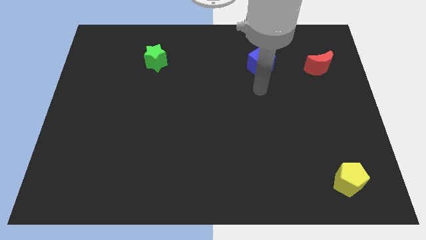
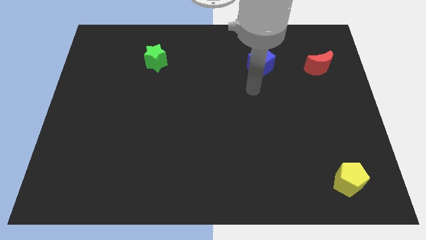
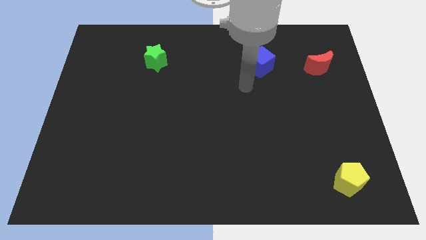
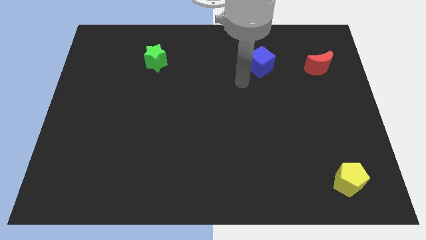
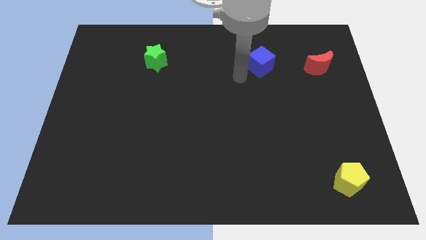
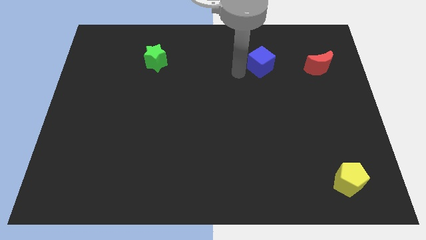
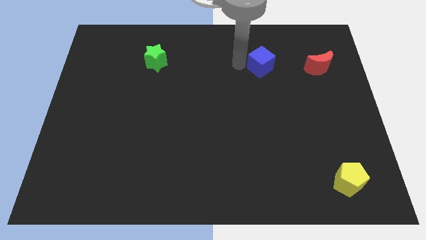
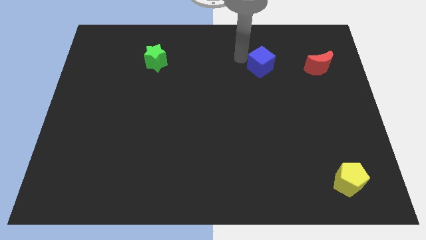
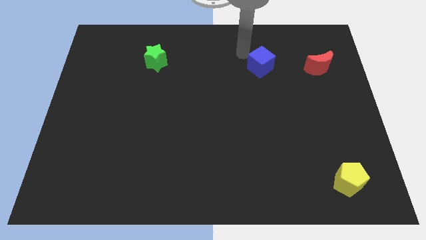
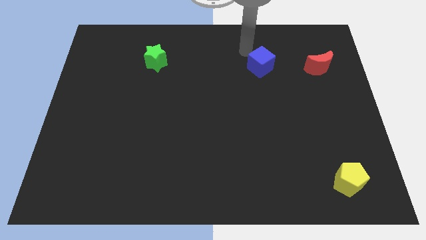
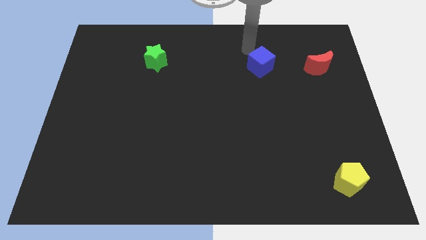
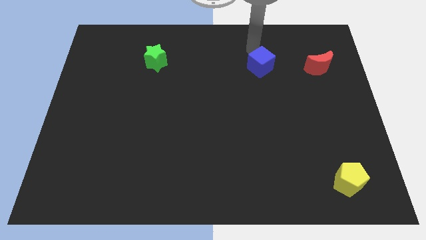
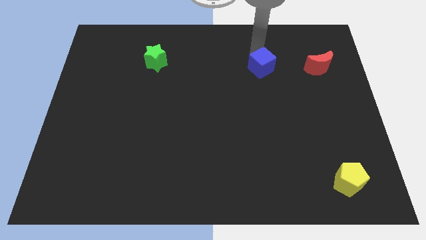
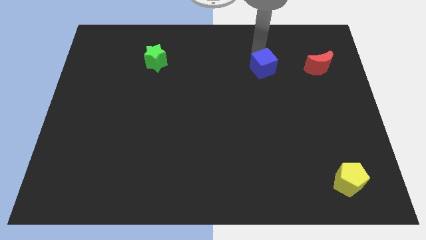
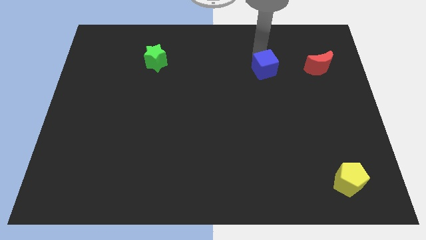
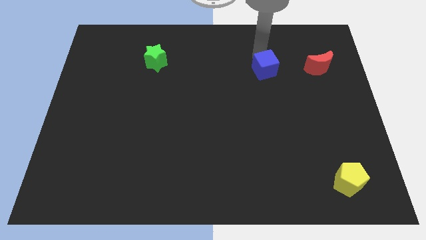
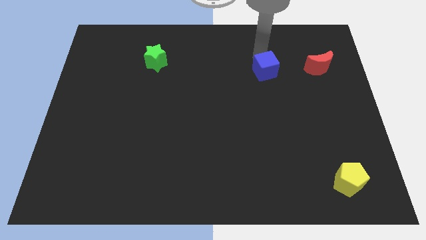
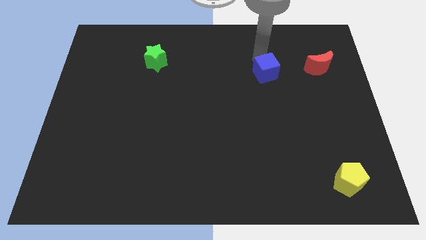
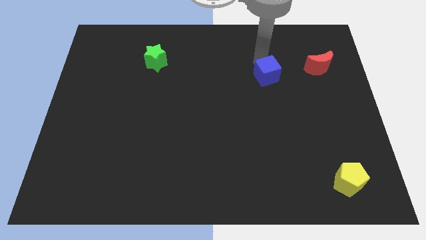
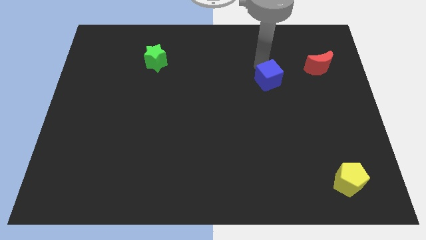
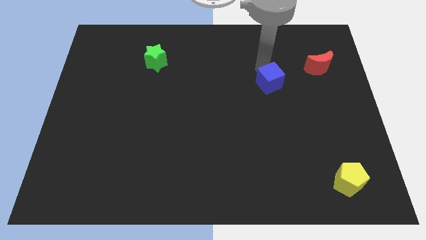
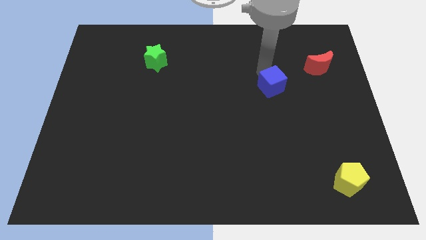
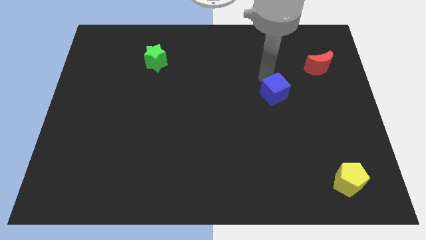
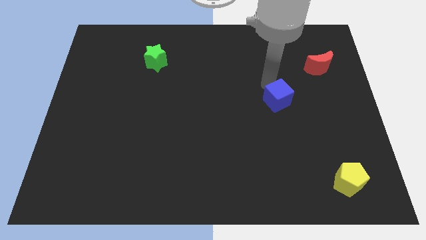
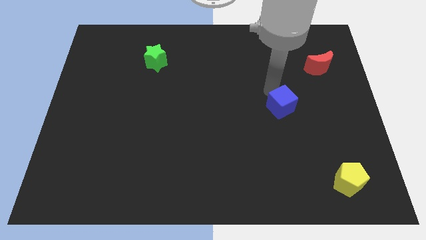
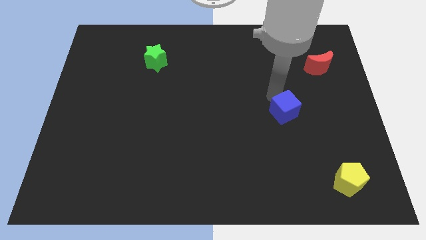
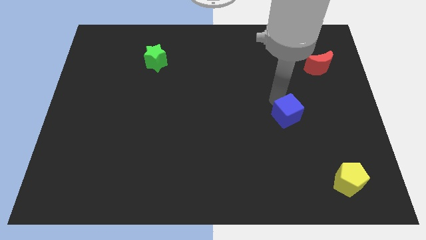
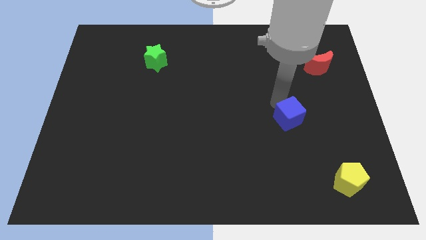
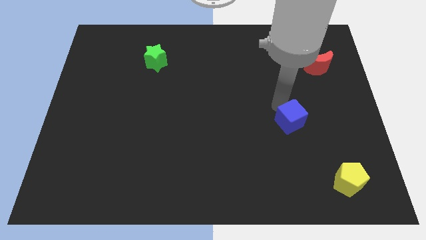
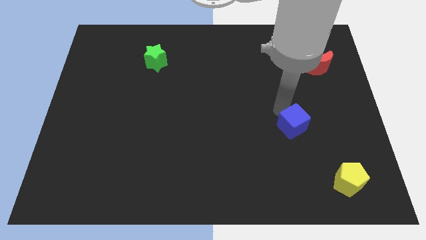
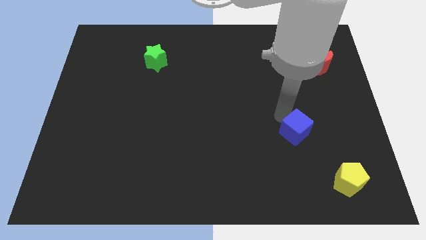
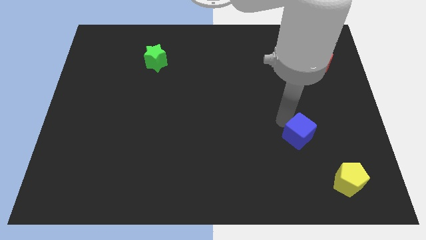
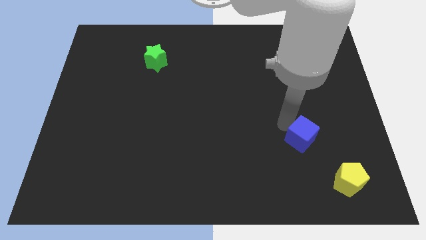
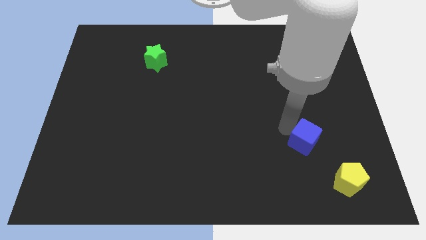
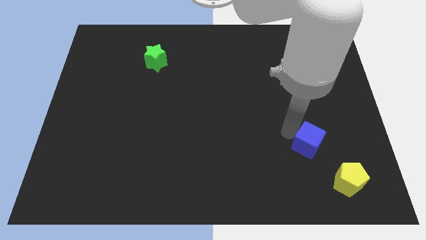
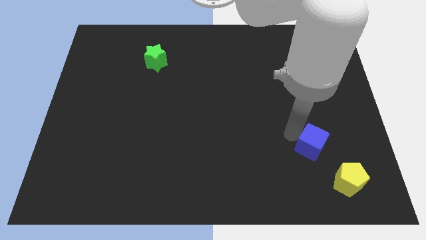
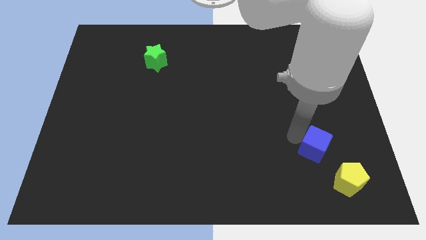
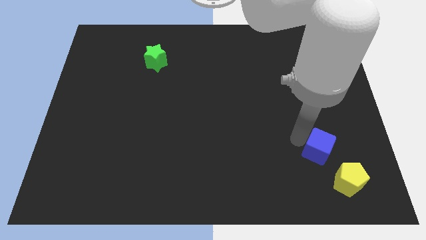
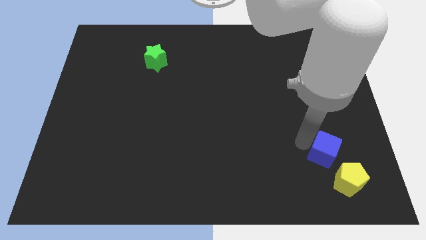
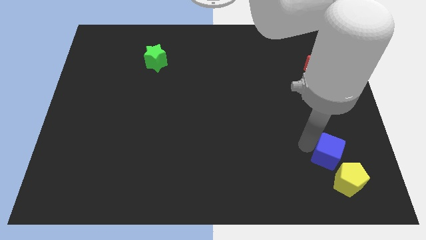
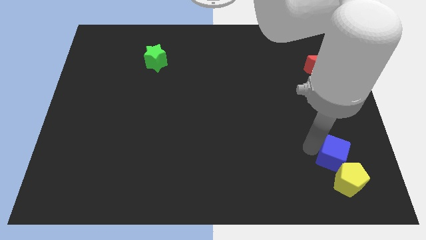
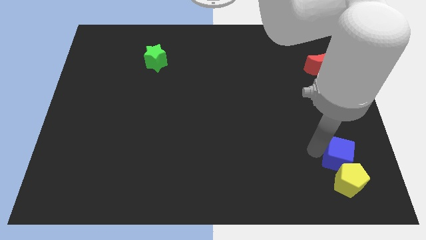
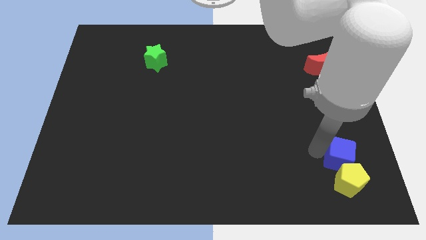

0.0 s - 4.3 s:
push the cube to the yellow pentagon

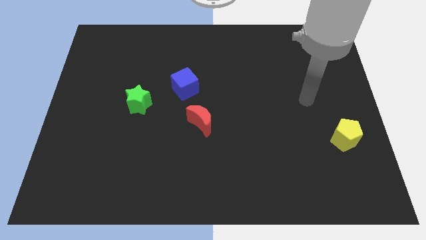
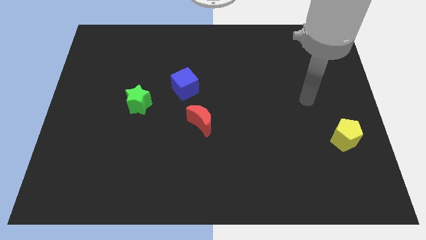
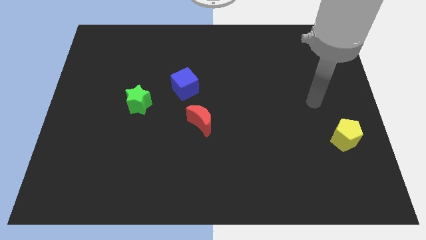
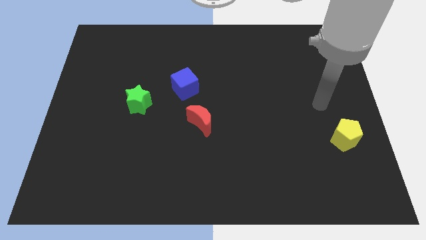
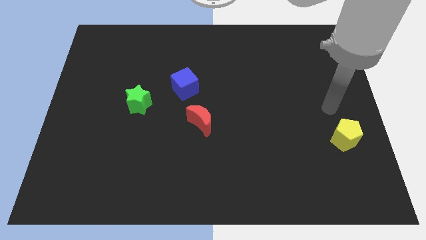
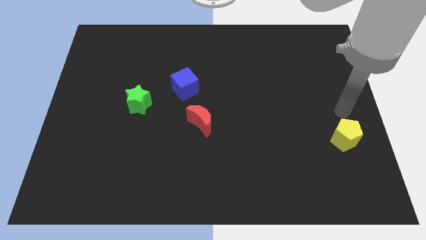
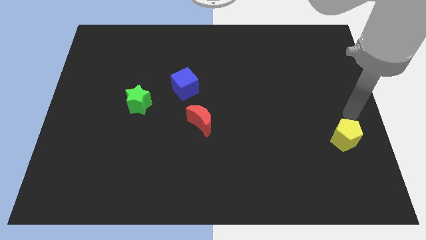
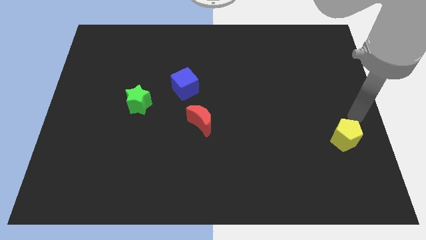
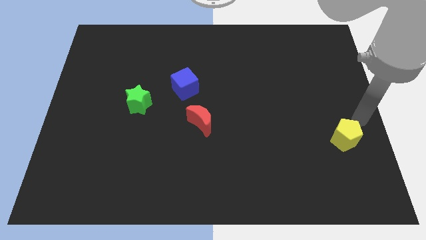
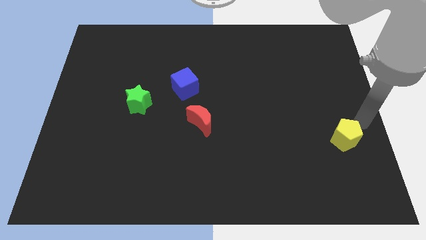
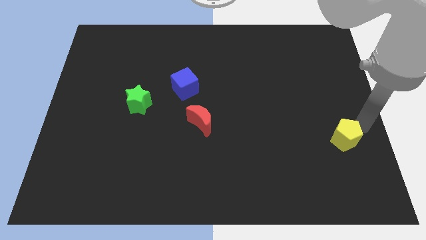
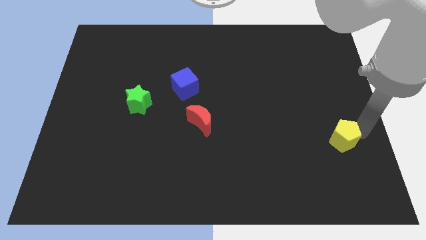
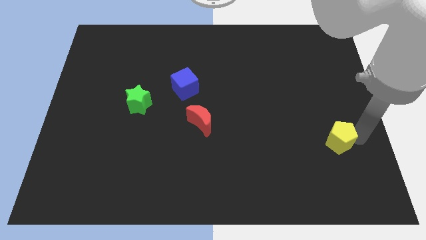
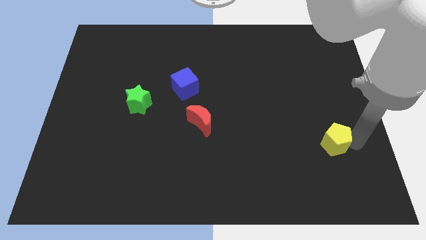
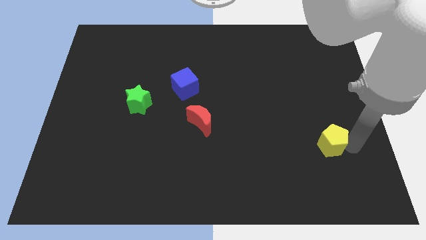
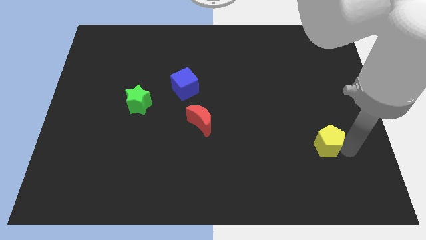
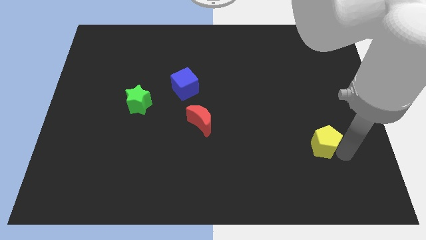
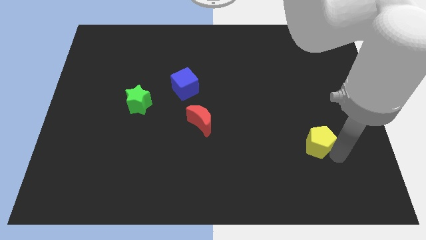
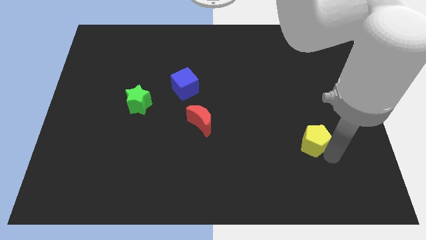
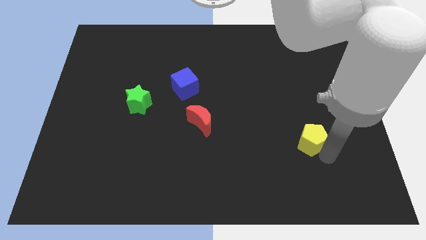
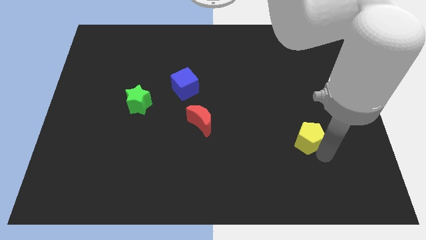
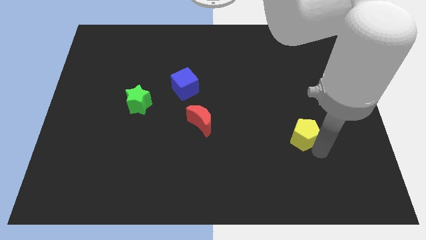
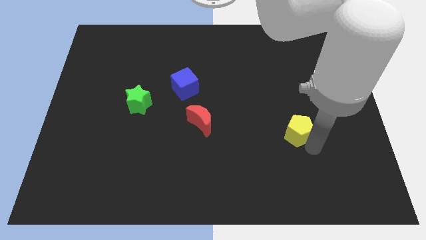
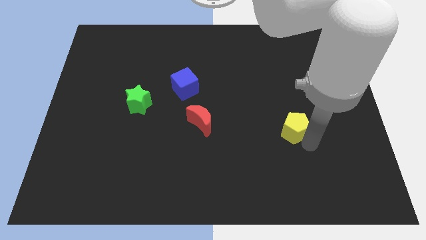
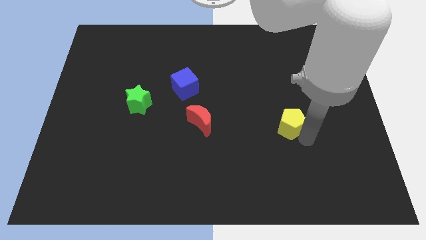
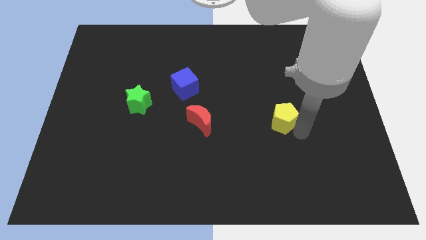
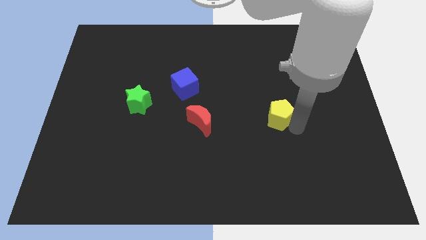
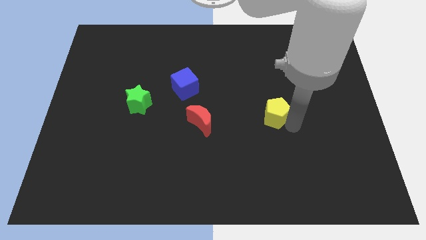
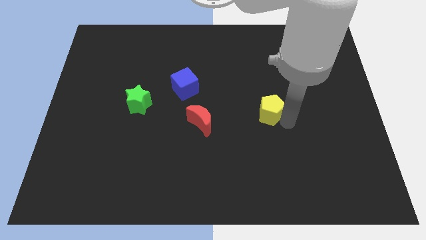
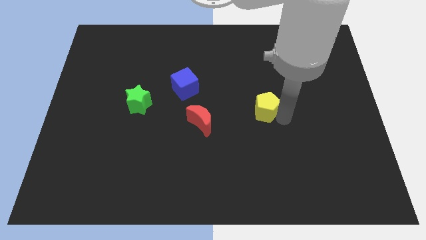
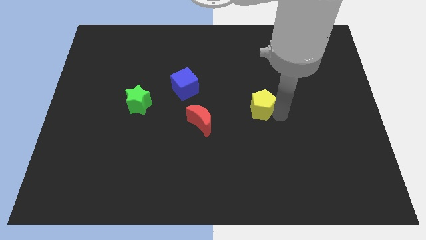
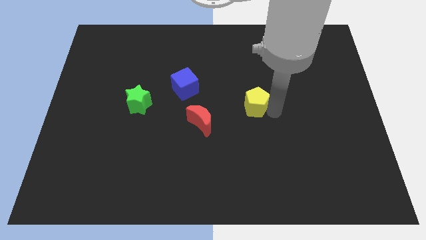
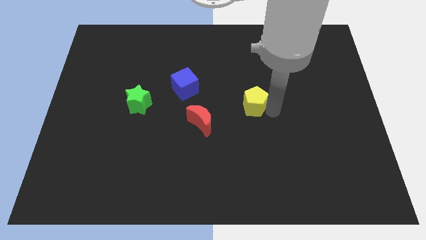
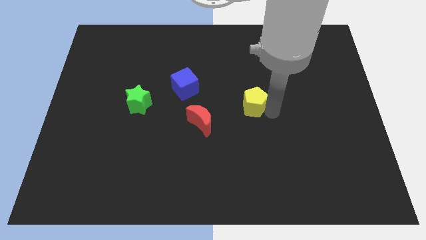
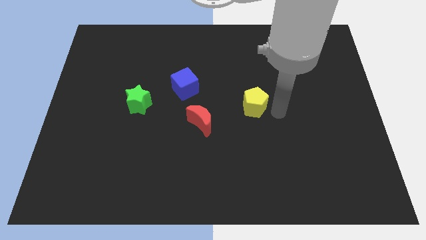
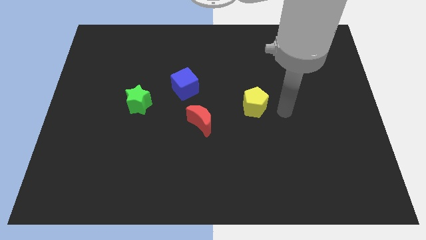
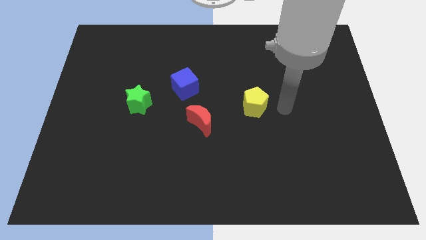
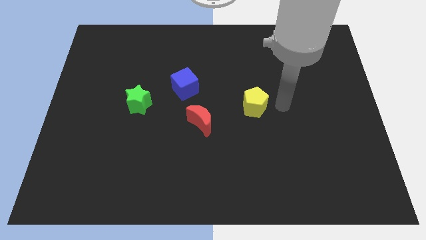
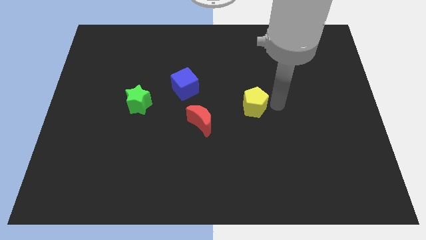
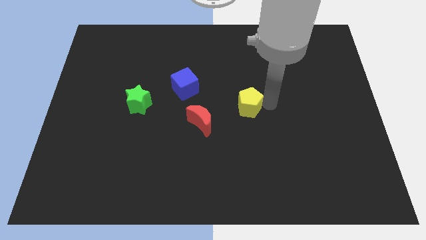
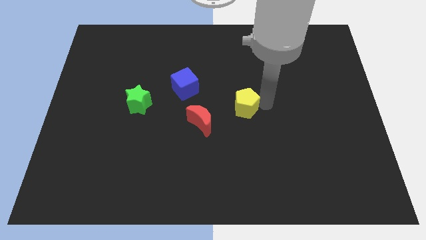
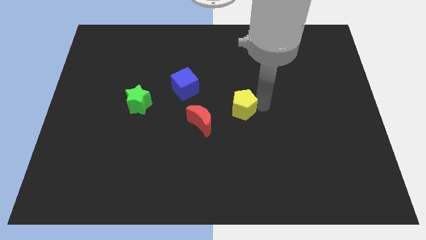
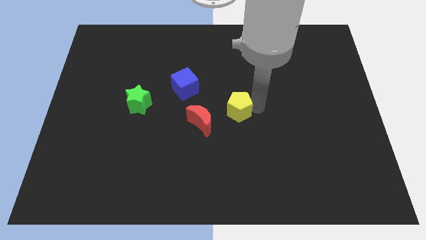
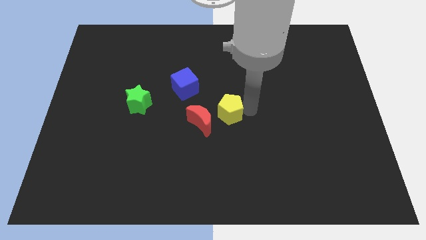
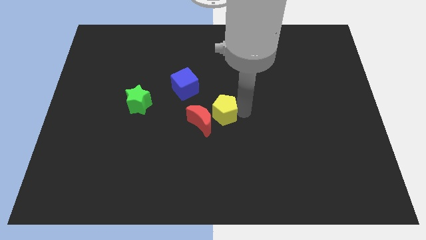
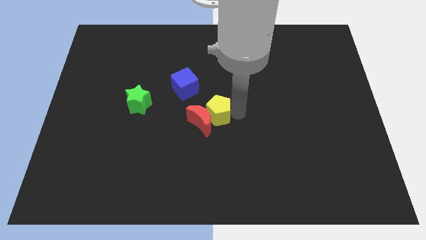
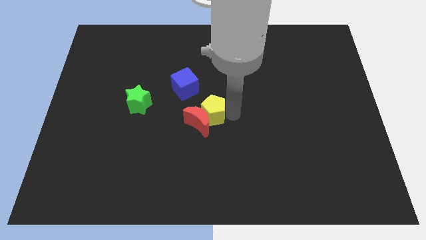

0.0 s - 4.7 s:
push the yellow block towards the red block
